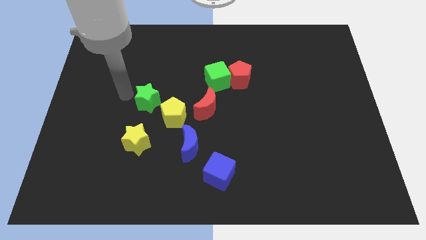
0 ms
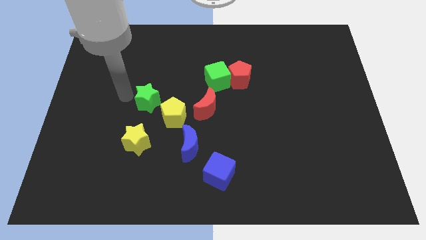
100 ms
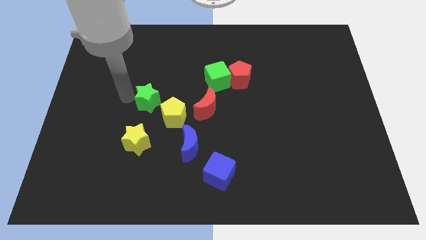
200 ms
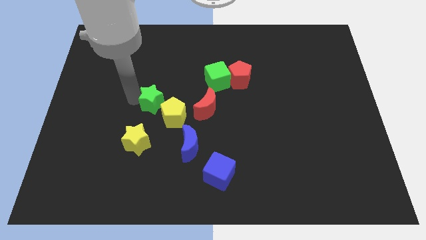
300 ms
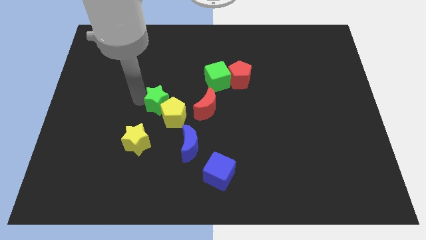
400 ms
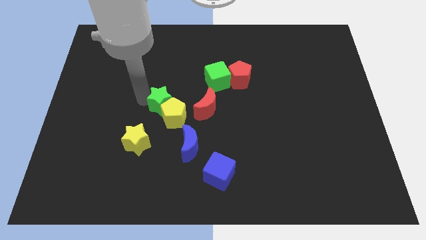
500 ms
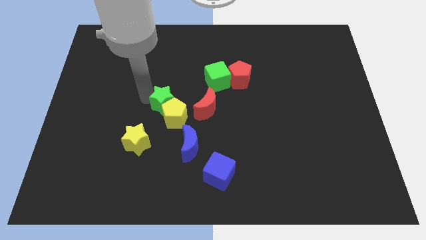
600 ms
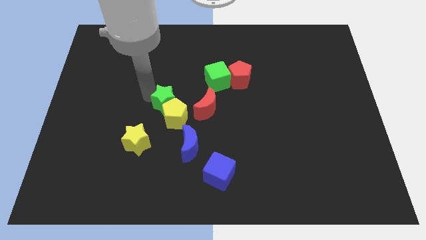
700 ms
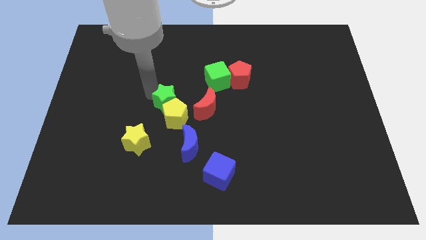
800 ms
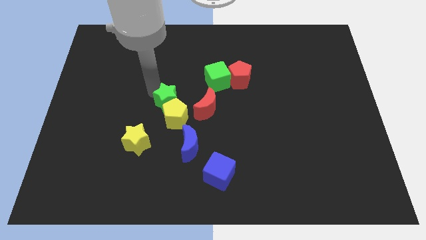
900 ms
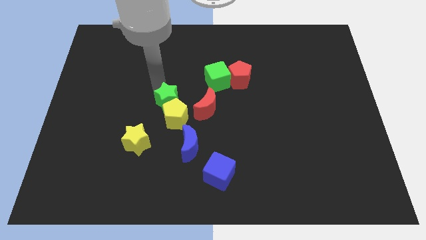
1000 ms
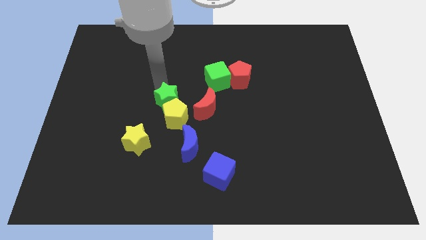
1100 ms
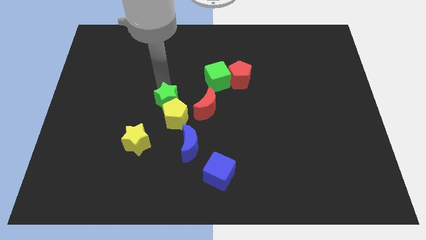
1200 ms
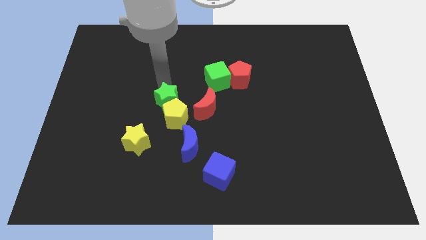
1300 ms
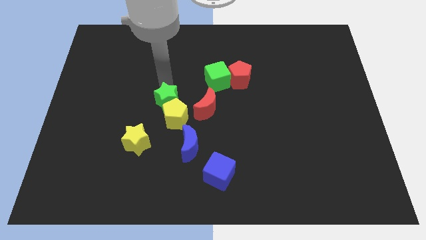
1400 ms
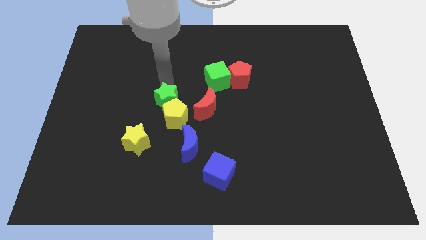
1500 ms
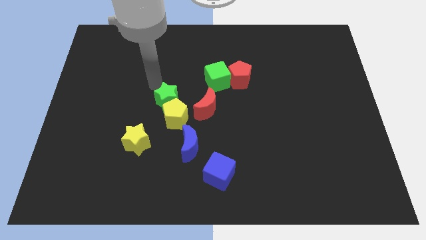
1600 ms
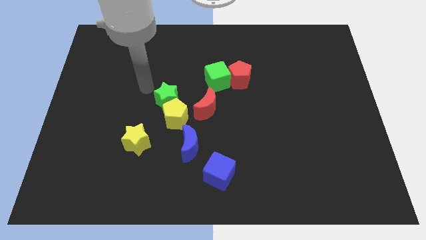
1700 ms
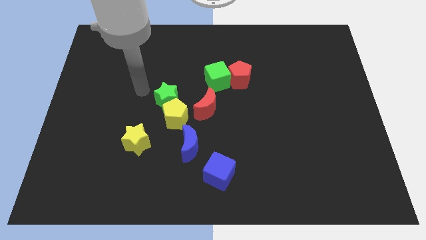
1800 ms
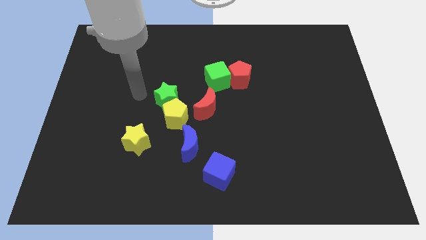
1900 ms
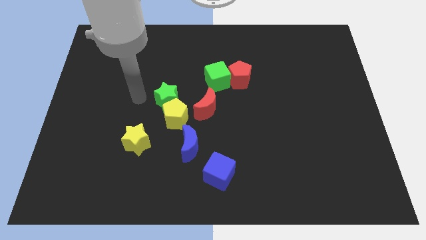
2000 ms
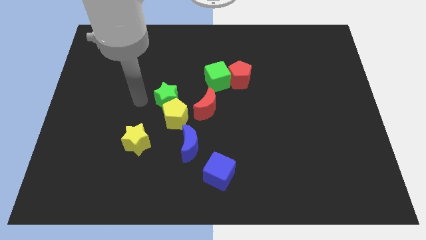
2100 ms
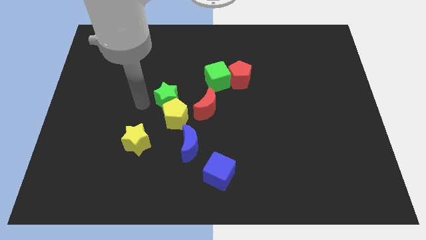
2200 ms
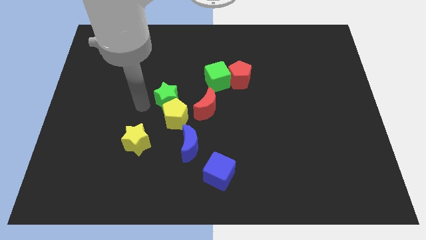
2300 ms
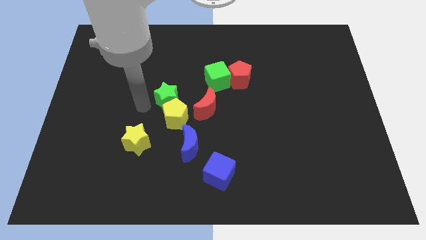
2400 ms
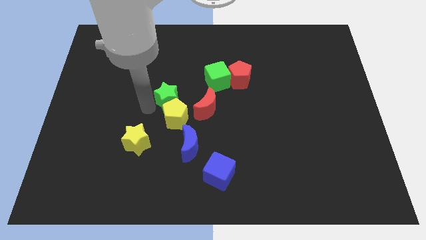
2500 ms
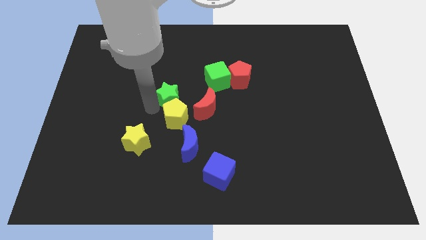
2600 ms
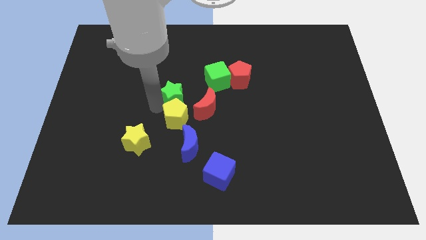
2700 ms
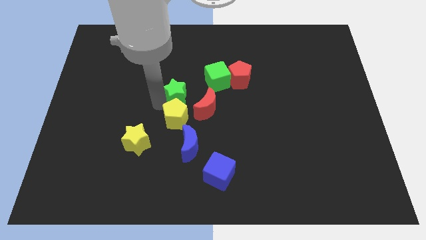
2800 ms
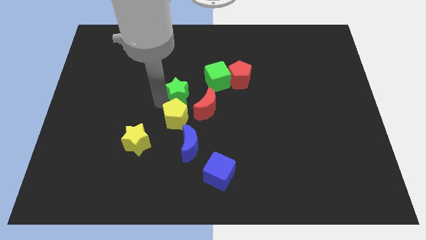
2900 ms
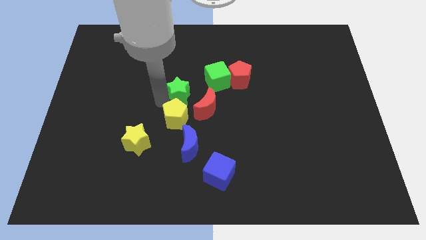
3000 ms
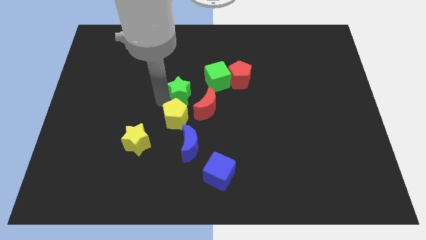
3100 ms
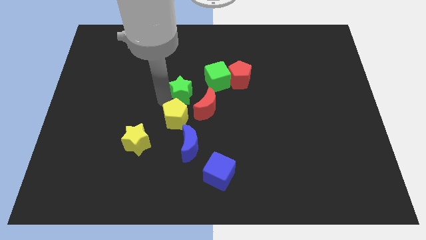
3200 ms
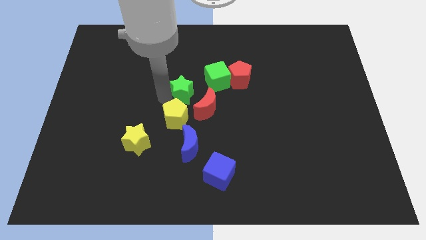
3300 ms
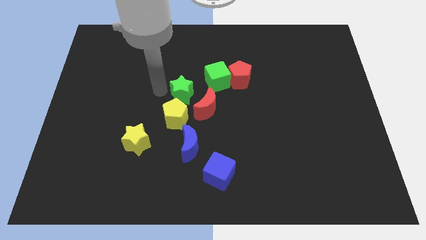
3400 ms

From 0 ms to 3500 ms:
move the green star to the top of the yellow pentagon

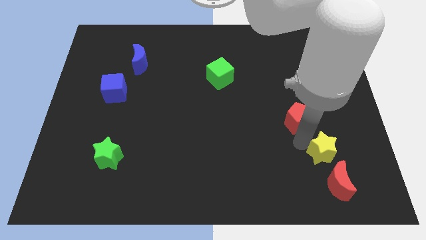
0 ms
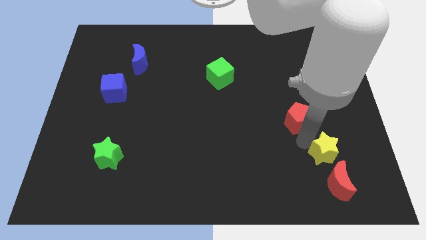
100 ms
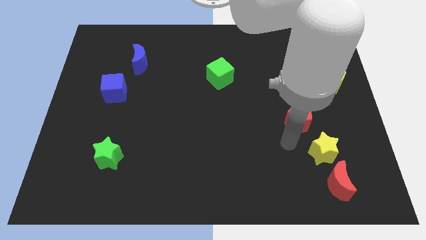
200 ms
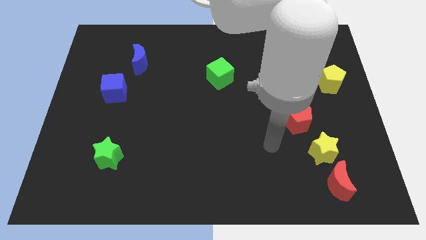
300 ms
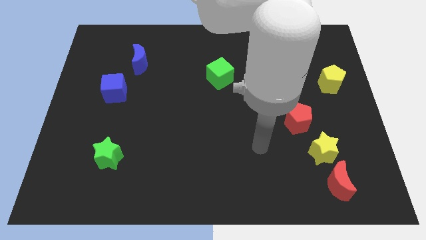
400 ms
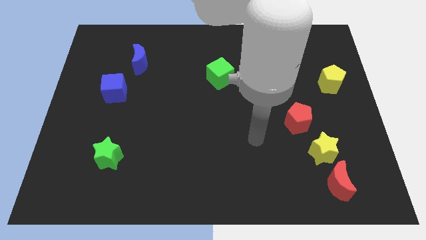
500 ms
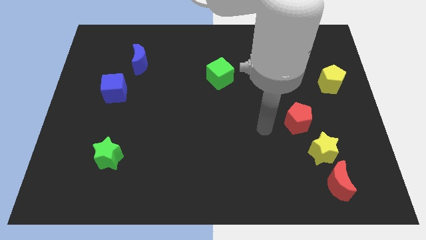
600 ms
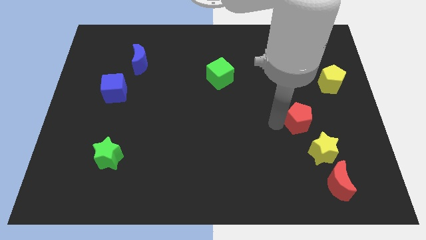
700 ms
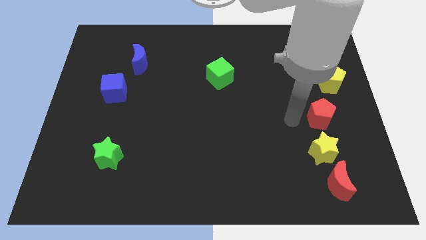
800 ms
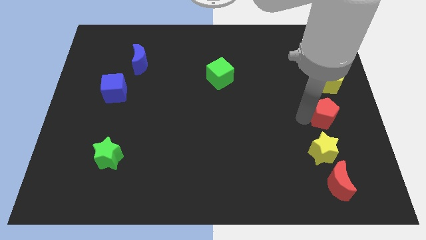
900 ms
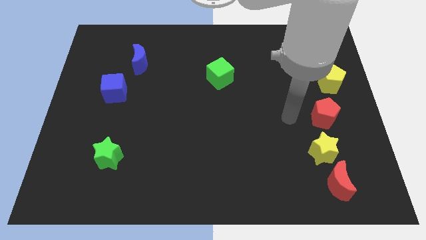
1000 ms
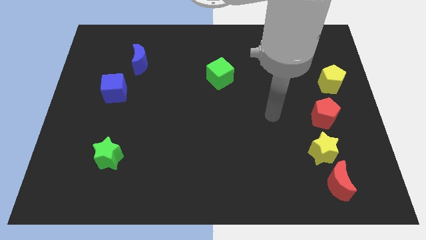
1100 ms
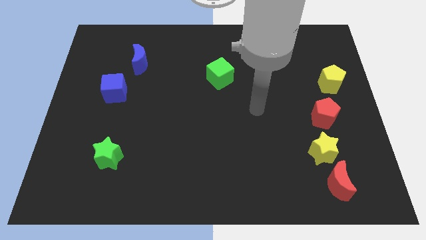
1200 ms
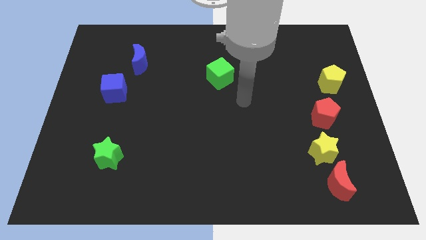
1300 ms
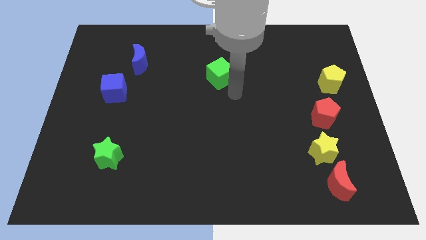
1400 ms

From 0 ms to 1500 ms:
push the red pentagon between yellow blocks

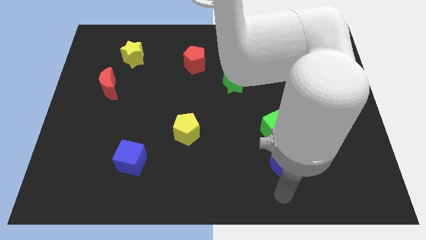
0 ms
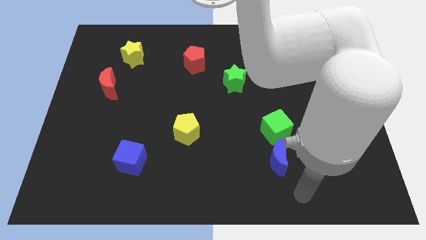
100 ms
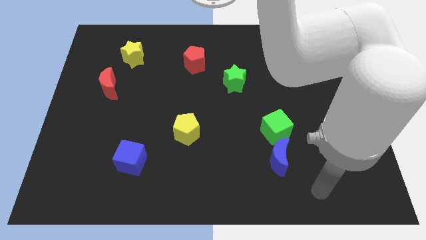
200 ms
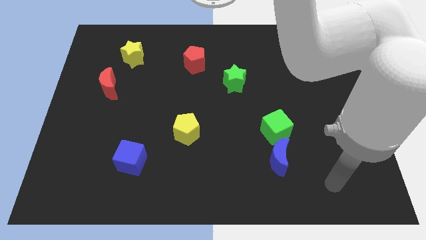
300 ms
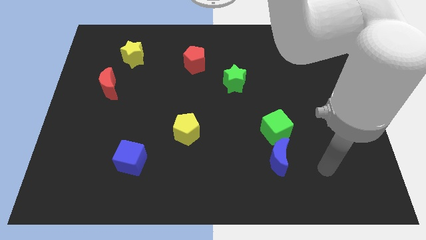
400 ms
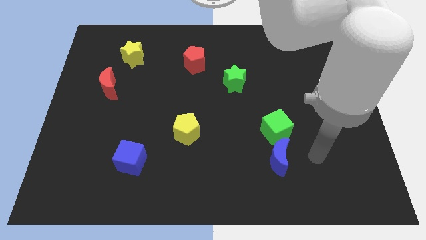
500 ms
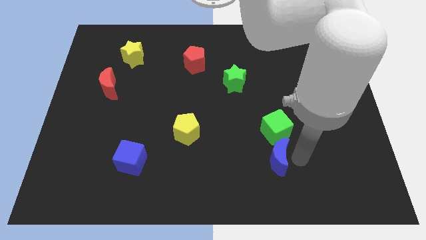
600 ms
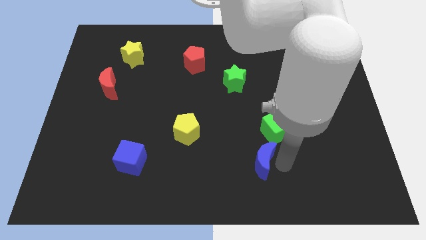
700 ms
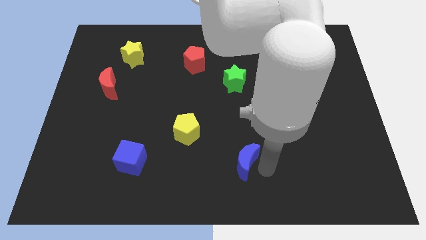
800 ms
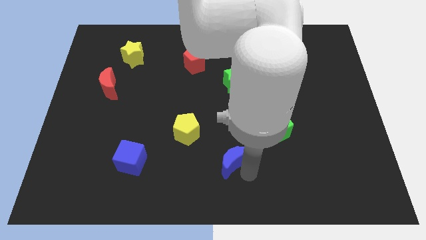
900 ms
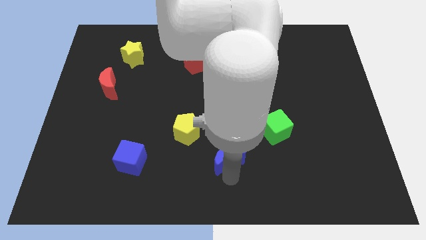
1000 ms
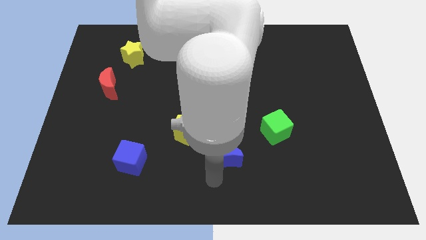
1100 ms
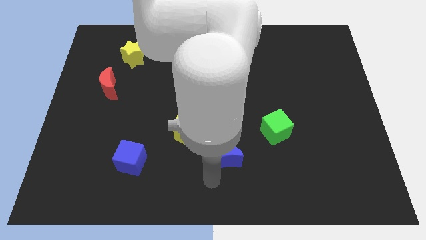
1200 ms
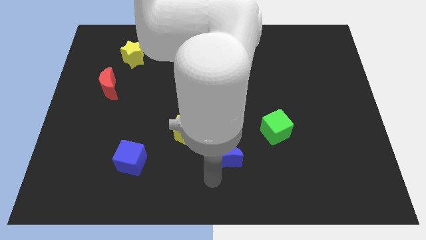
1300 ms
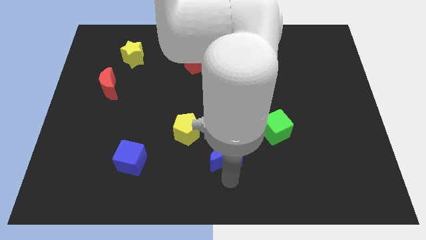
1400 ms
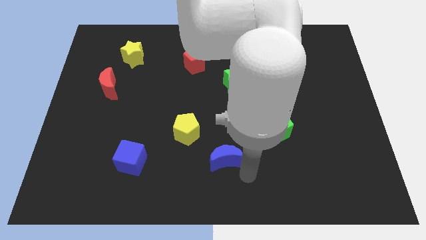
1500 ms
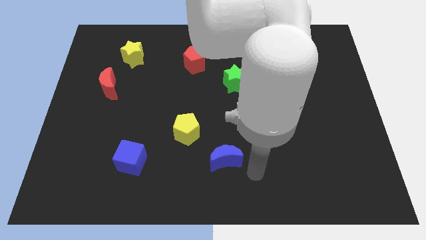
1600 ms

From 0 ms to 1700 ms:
separate blue moon and green cube

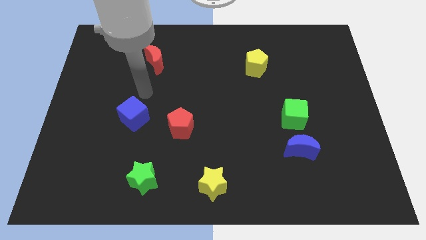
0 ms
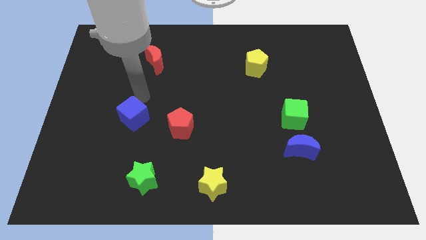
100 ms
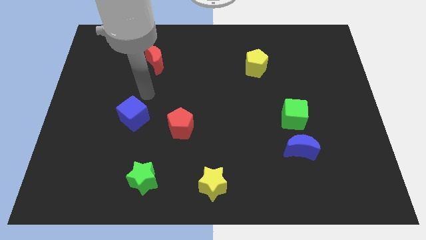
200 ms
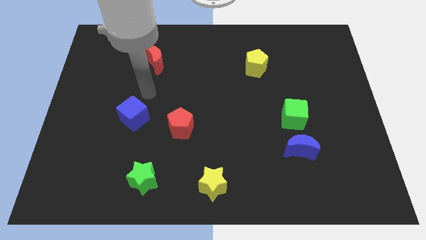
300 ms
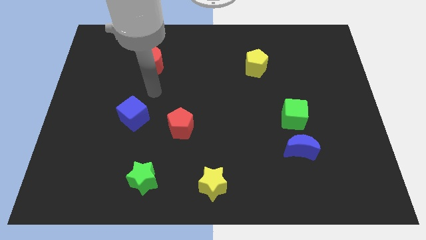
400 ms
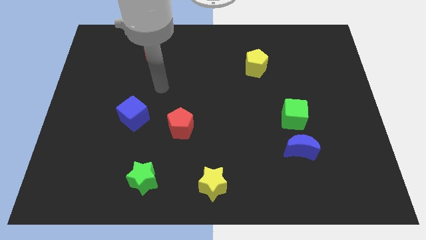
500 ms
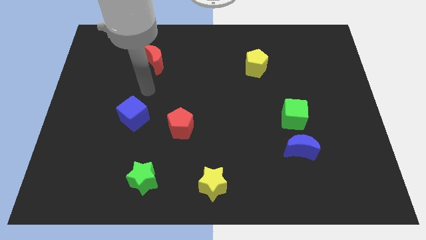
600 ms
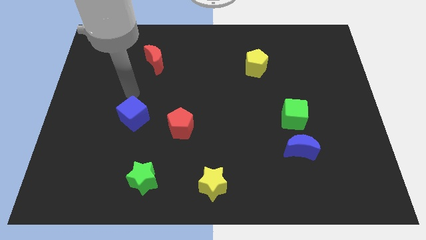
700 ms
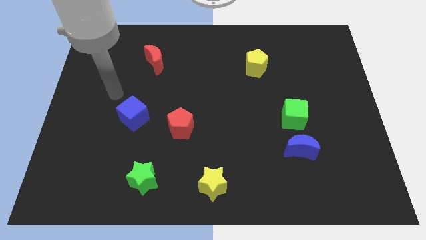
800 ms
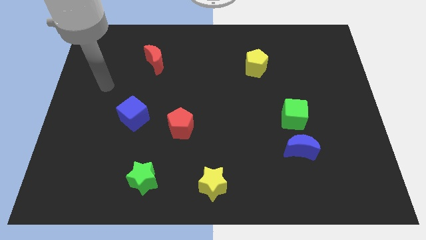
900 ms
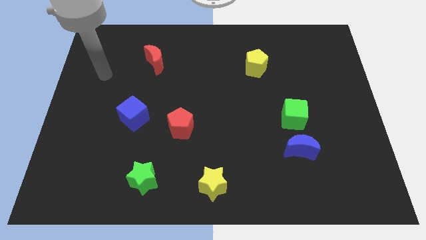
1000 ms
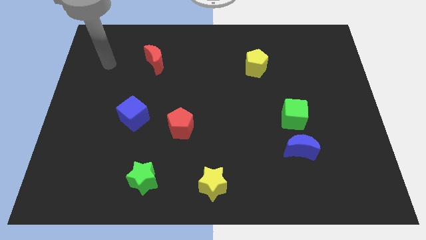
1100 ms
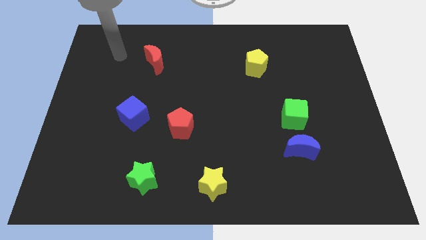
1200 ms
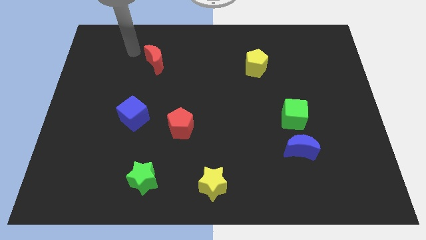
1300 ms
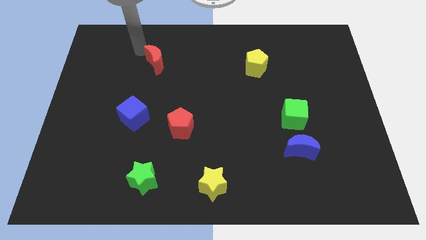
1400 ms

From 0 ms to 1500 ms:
place your arm at the top left of the red moon

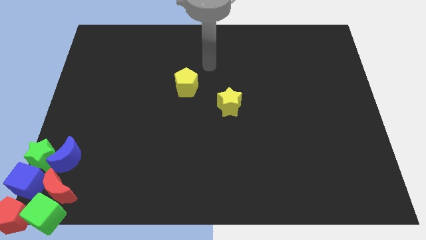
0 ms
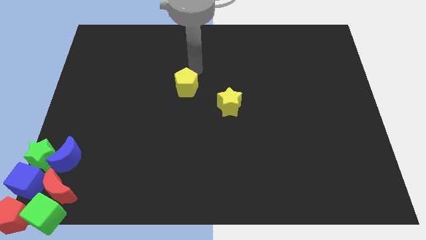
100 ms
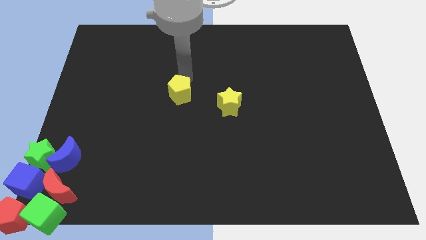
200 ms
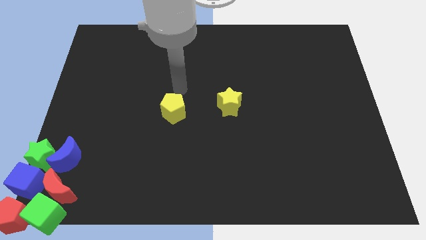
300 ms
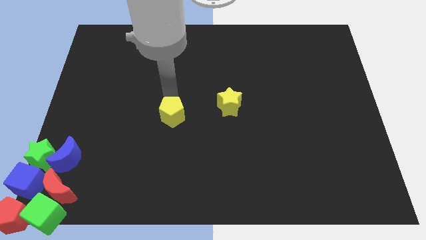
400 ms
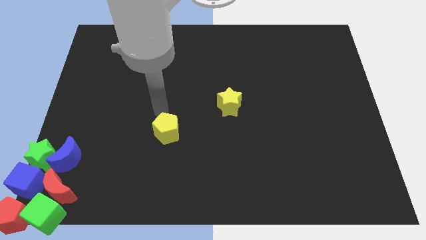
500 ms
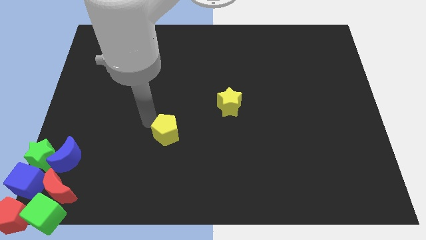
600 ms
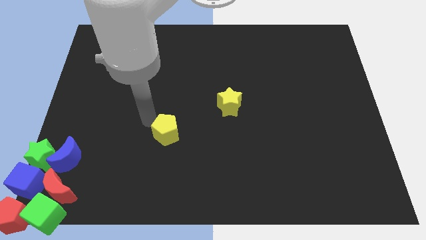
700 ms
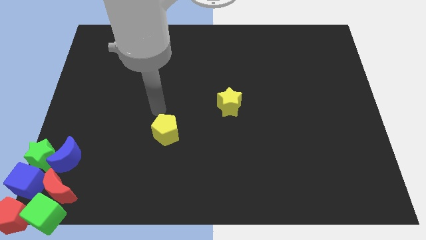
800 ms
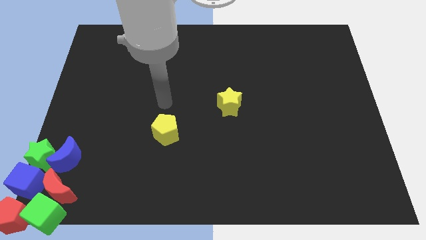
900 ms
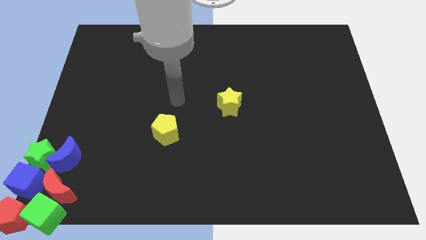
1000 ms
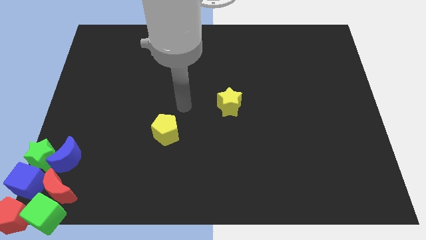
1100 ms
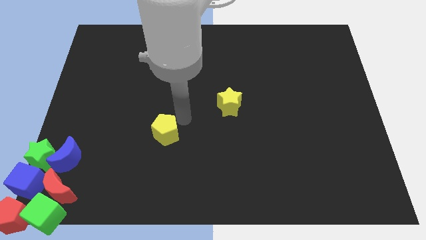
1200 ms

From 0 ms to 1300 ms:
slightly move the yellow pentagon towards down
